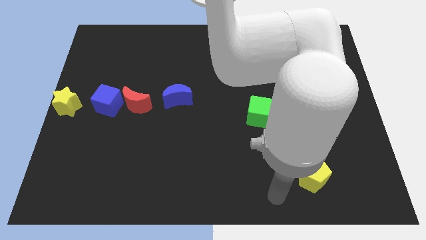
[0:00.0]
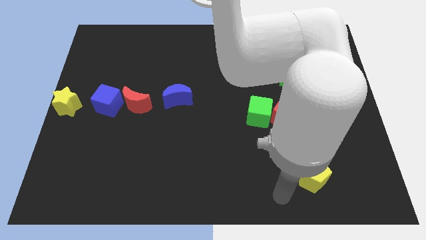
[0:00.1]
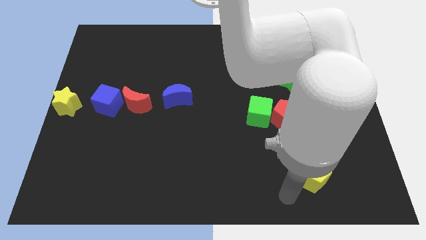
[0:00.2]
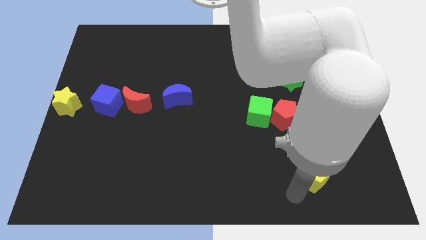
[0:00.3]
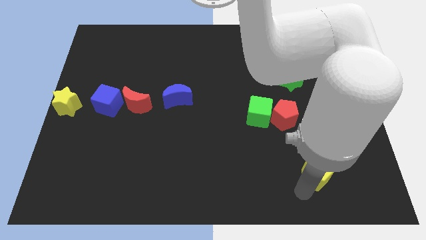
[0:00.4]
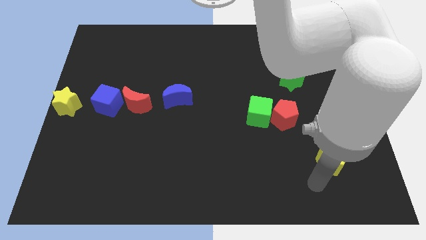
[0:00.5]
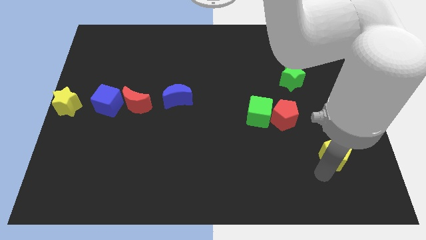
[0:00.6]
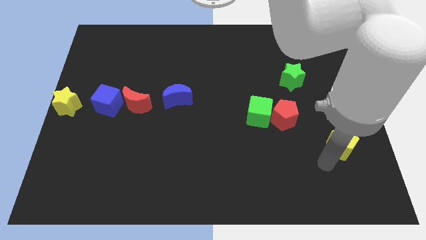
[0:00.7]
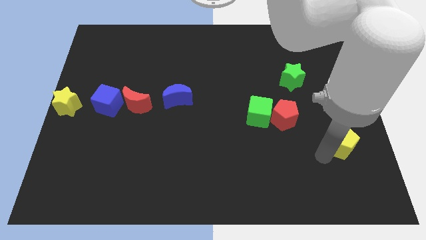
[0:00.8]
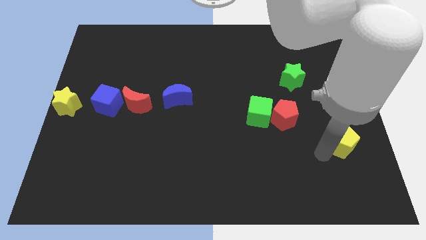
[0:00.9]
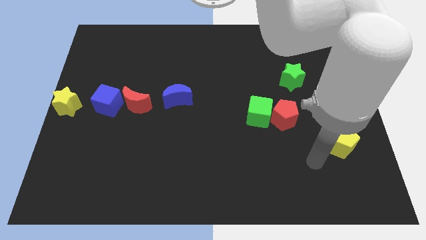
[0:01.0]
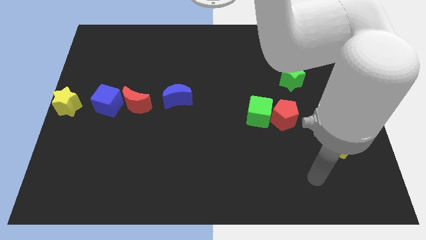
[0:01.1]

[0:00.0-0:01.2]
push the yellow pentagon towards the top side of the board

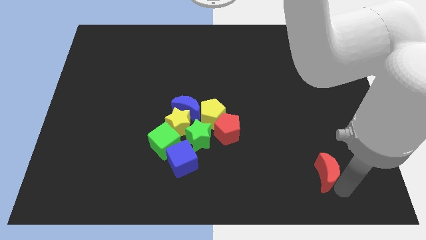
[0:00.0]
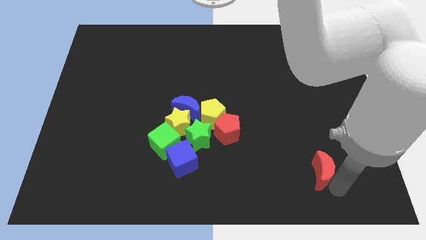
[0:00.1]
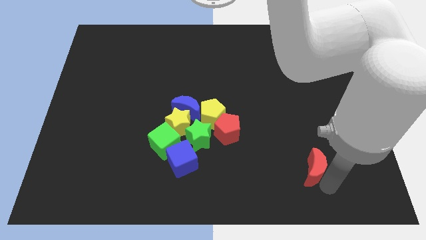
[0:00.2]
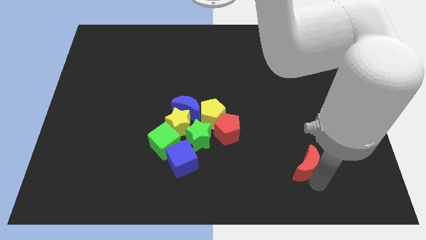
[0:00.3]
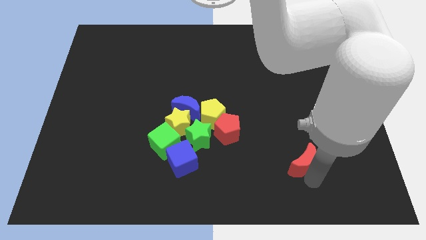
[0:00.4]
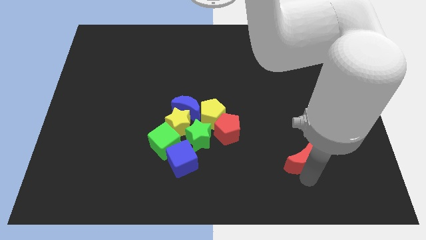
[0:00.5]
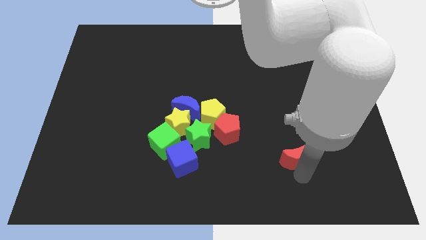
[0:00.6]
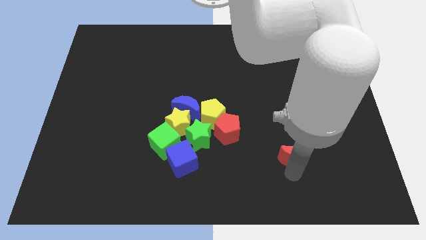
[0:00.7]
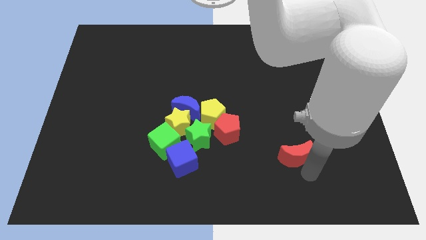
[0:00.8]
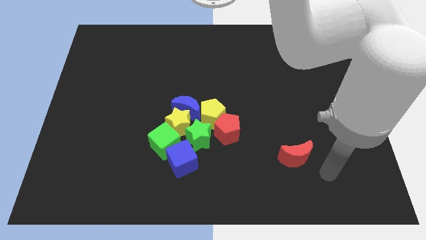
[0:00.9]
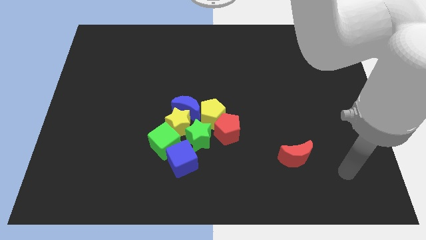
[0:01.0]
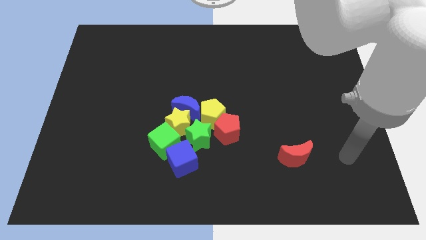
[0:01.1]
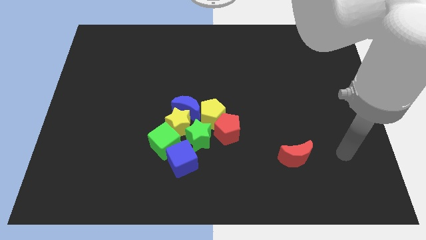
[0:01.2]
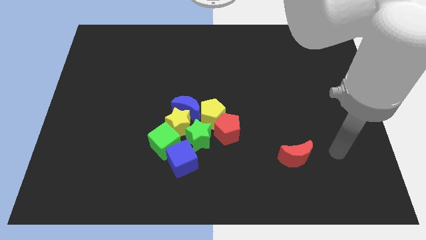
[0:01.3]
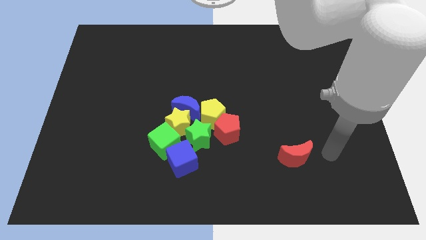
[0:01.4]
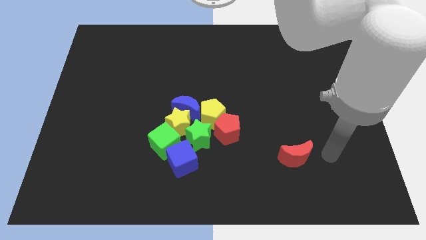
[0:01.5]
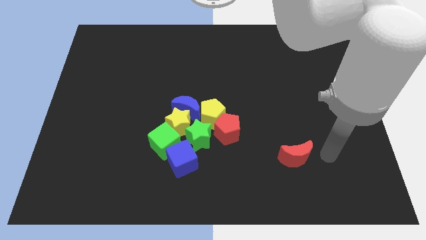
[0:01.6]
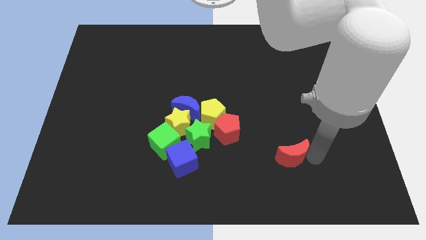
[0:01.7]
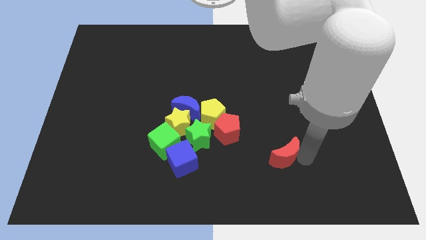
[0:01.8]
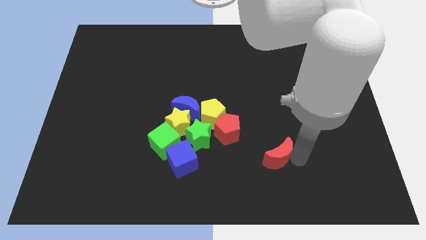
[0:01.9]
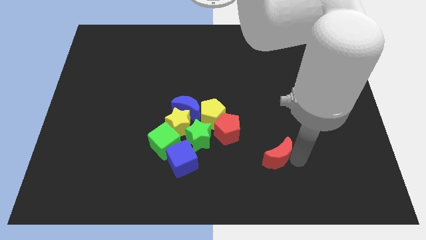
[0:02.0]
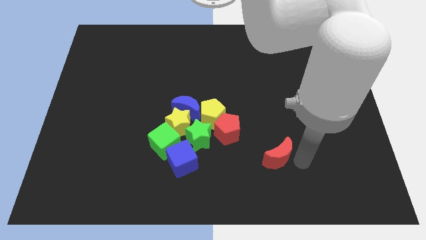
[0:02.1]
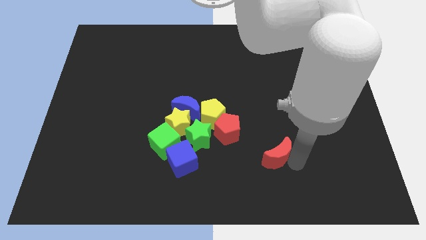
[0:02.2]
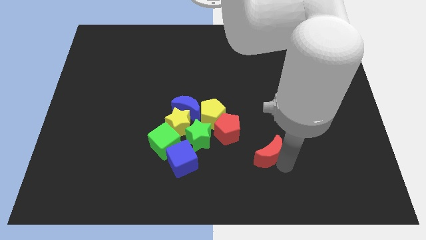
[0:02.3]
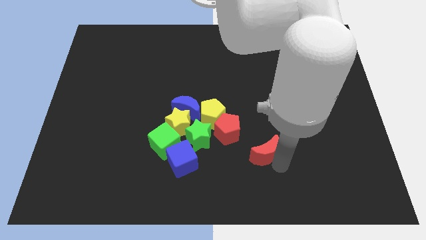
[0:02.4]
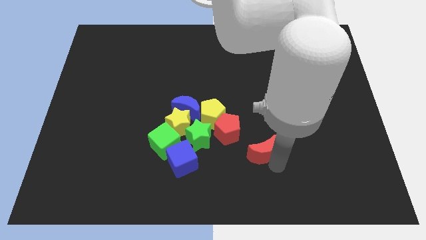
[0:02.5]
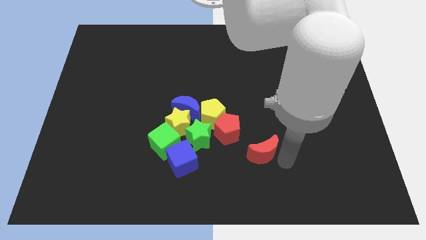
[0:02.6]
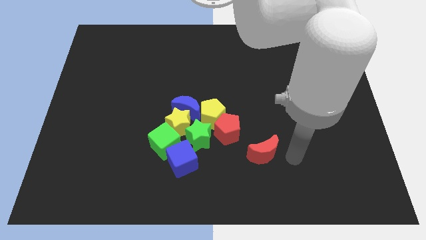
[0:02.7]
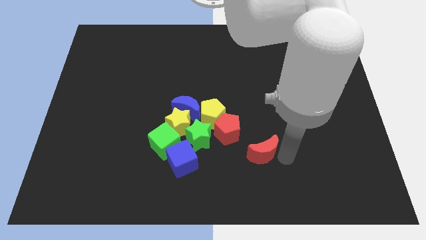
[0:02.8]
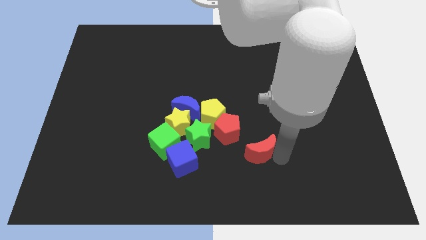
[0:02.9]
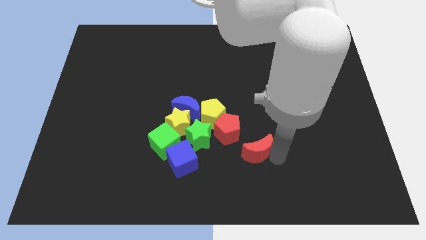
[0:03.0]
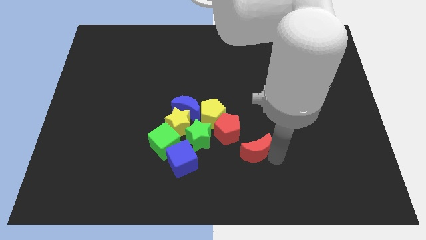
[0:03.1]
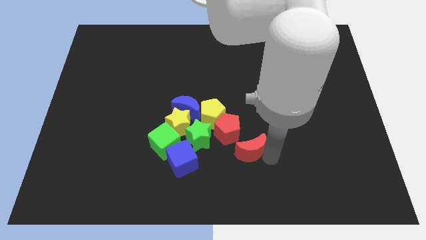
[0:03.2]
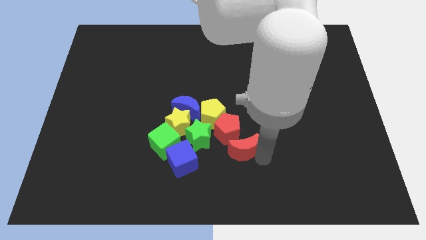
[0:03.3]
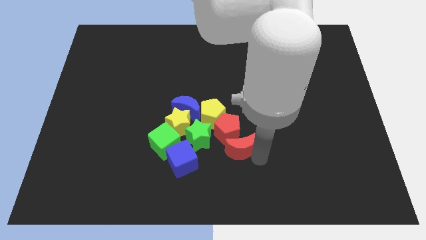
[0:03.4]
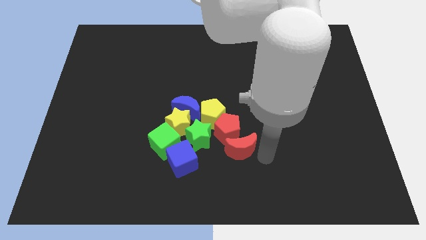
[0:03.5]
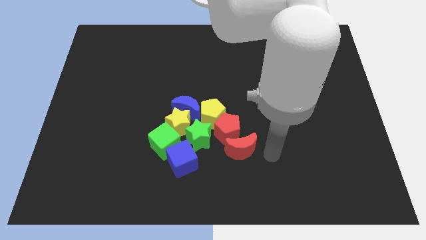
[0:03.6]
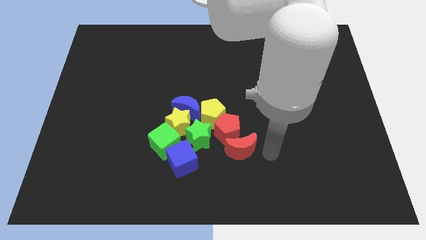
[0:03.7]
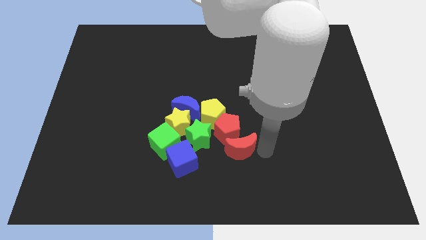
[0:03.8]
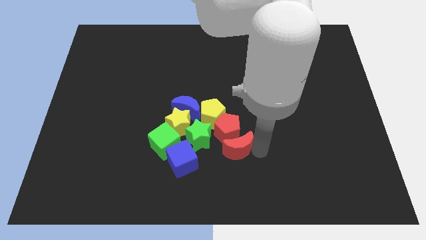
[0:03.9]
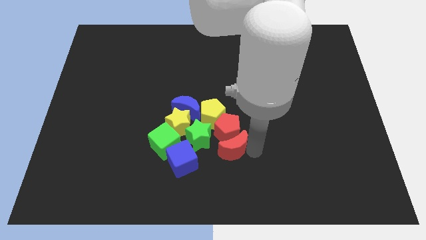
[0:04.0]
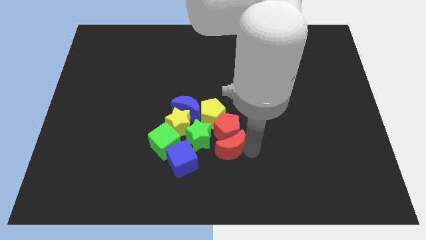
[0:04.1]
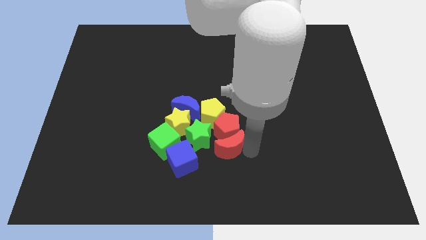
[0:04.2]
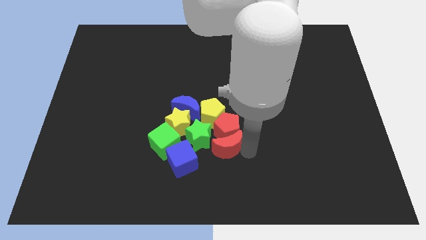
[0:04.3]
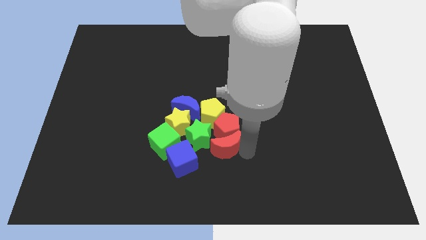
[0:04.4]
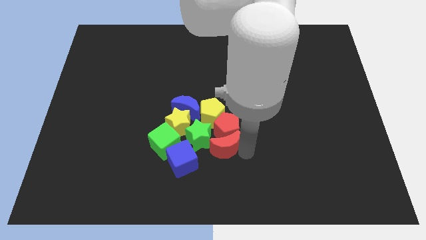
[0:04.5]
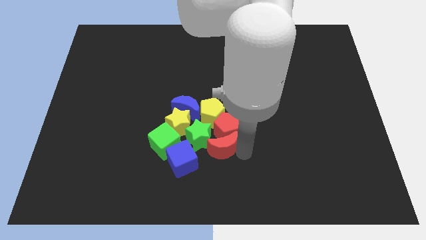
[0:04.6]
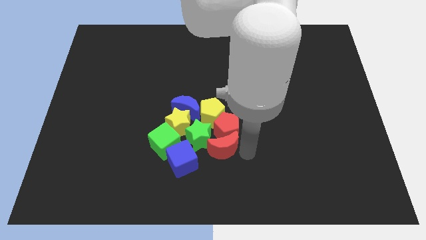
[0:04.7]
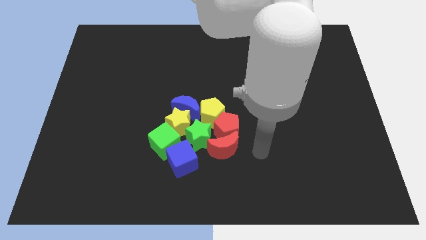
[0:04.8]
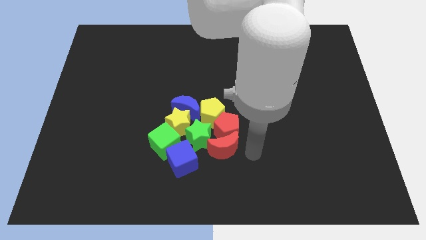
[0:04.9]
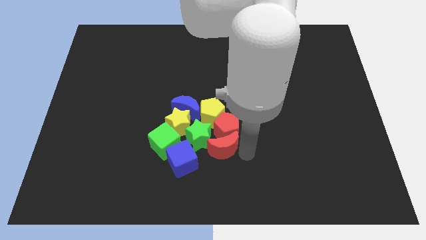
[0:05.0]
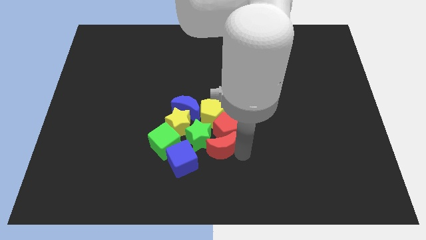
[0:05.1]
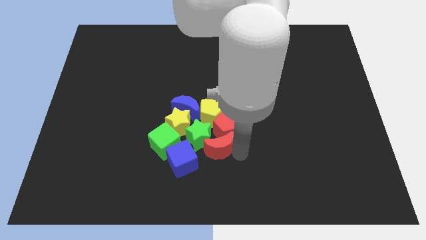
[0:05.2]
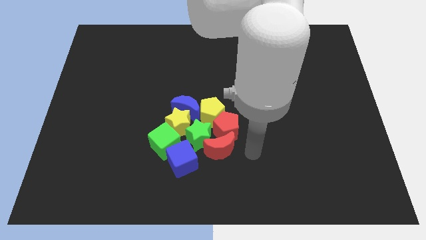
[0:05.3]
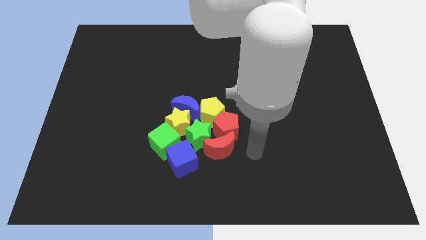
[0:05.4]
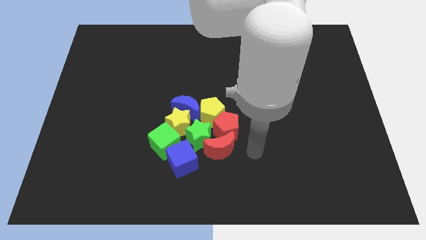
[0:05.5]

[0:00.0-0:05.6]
move the red crescent to the bottom of the red pentagon

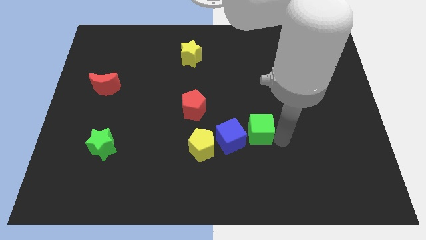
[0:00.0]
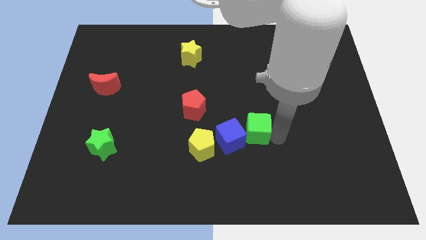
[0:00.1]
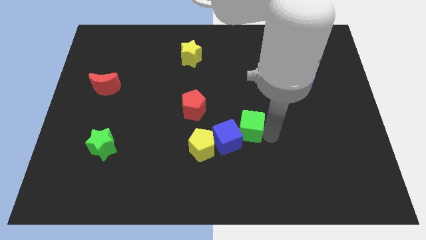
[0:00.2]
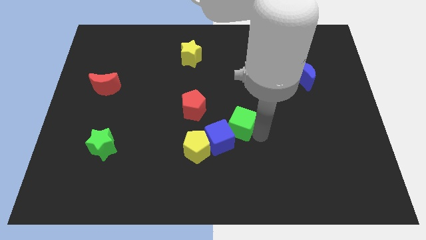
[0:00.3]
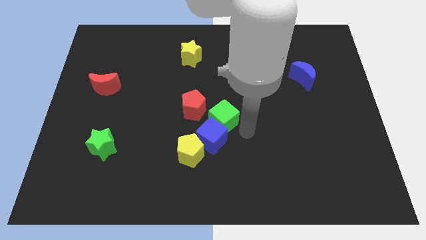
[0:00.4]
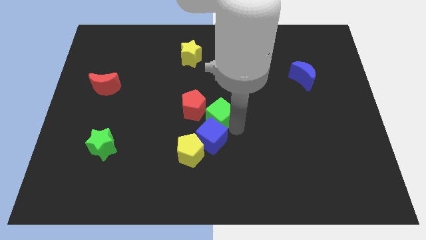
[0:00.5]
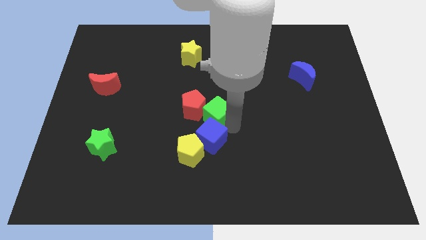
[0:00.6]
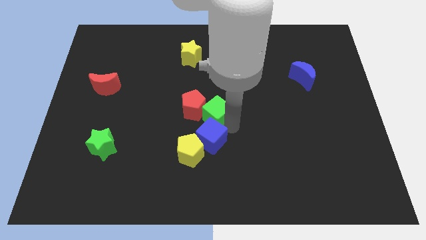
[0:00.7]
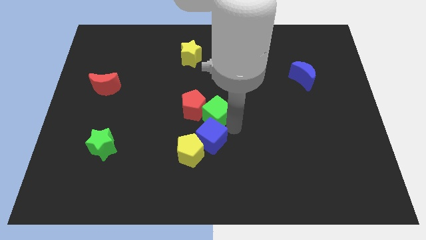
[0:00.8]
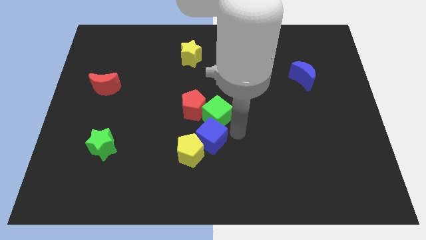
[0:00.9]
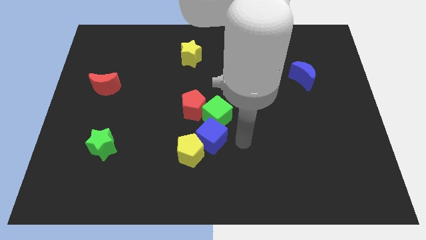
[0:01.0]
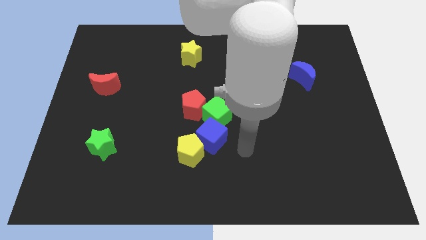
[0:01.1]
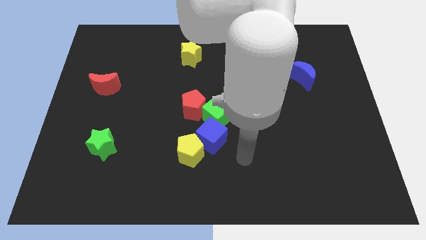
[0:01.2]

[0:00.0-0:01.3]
push green cube towards red pentagon

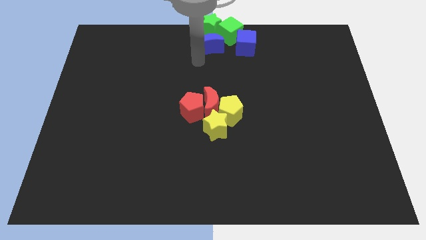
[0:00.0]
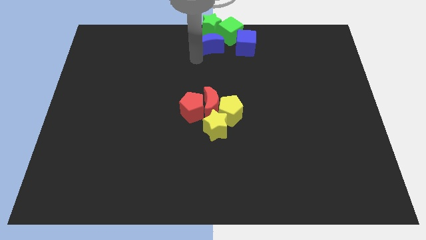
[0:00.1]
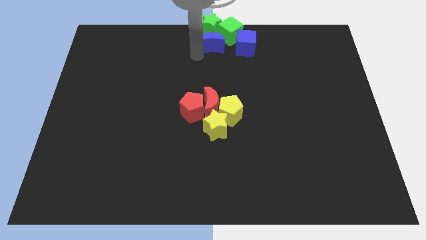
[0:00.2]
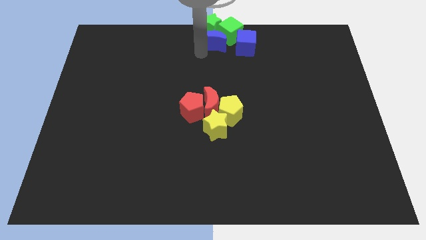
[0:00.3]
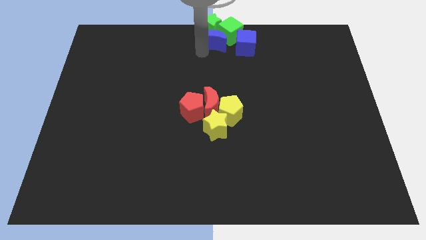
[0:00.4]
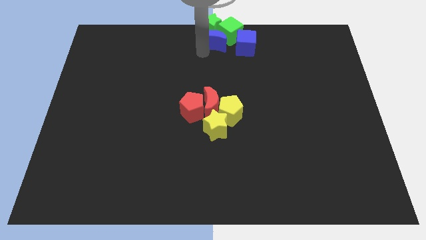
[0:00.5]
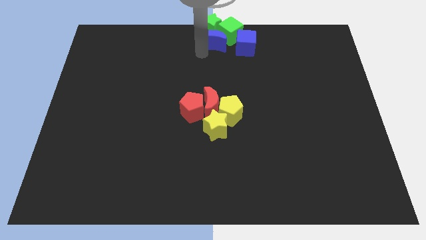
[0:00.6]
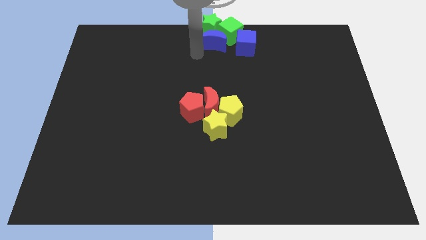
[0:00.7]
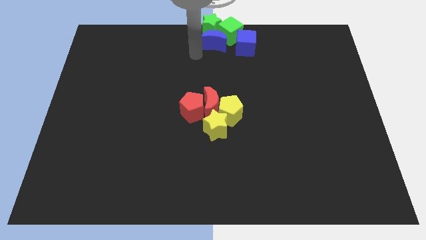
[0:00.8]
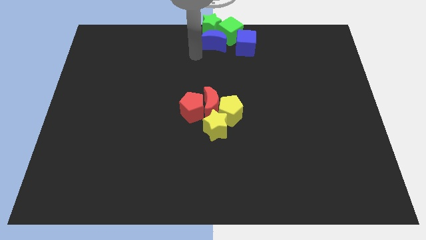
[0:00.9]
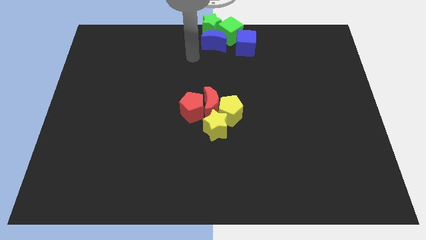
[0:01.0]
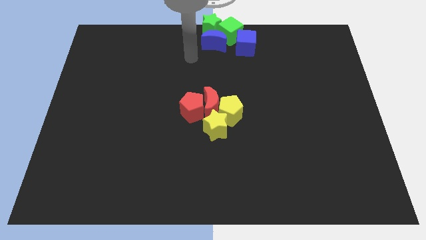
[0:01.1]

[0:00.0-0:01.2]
move the blue crescent into the green star and green cube
